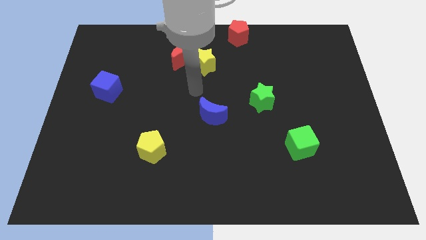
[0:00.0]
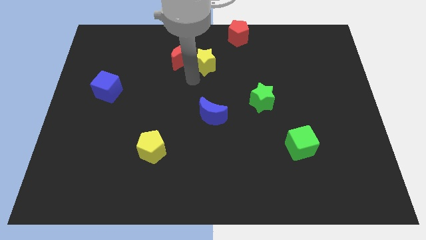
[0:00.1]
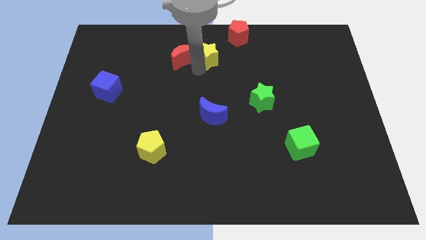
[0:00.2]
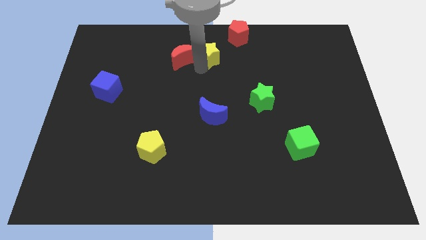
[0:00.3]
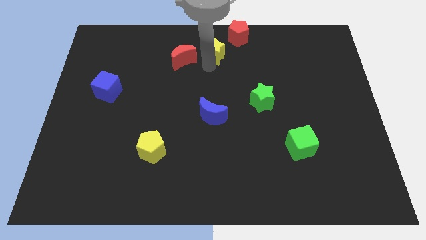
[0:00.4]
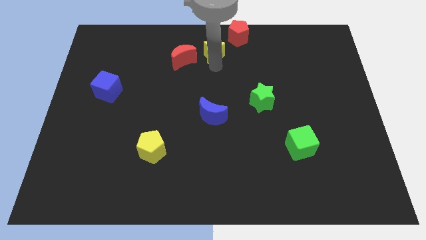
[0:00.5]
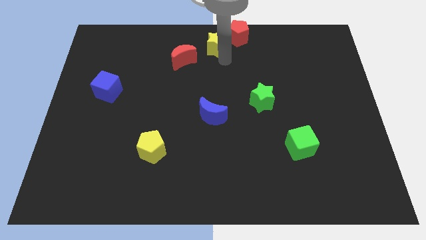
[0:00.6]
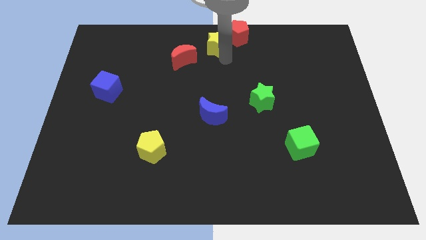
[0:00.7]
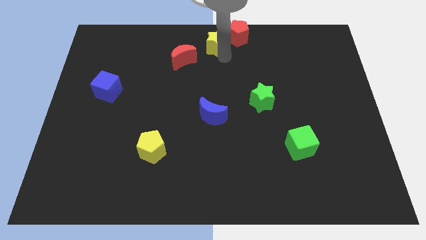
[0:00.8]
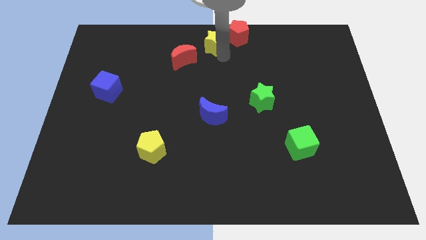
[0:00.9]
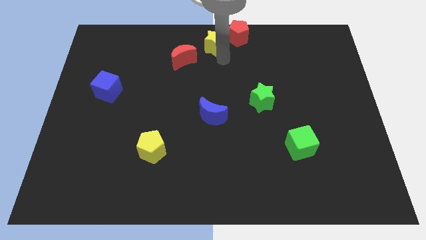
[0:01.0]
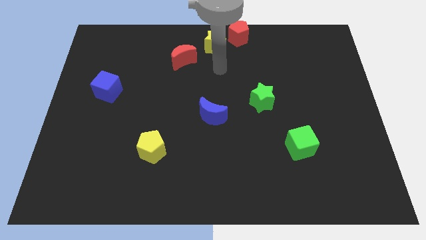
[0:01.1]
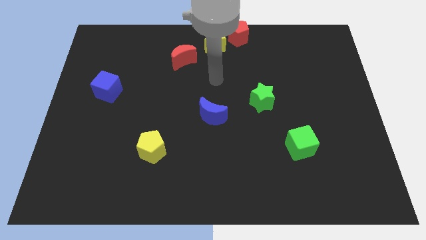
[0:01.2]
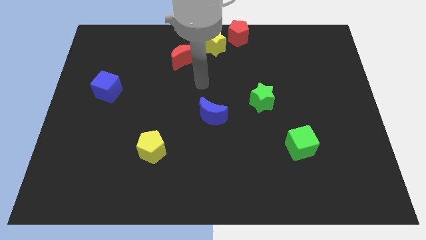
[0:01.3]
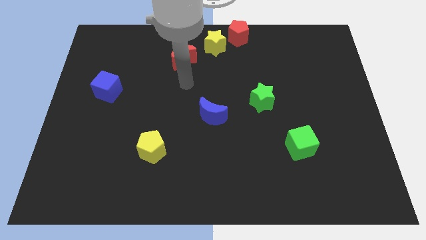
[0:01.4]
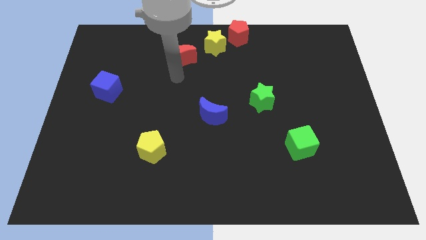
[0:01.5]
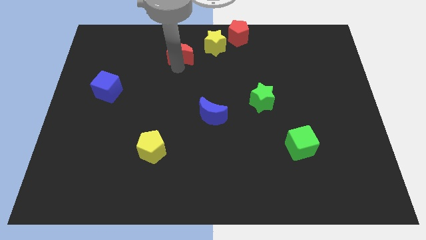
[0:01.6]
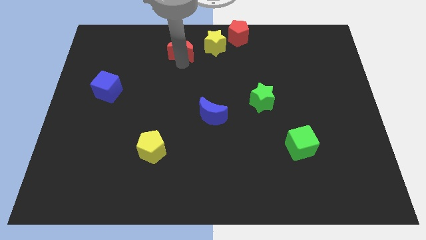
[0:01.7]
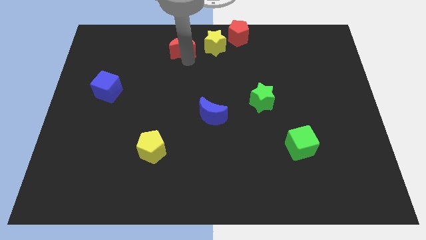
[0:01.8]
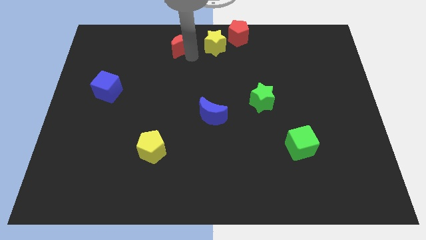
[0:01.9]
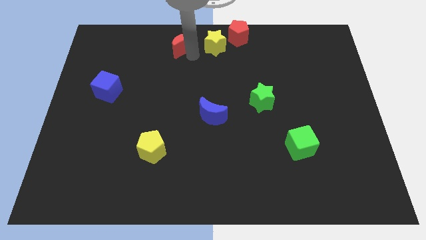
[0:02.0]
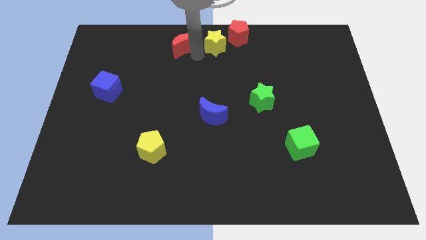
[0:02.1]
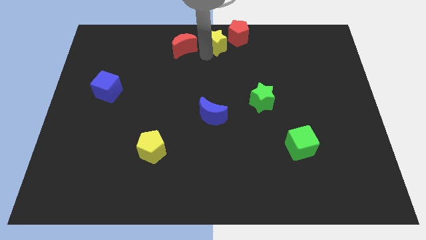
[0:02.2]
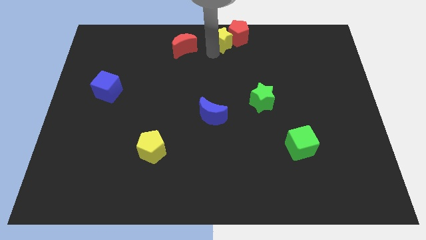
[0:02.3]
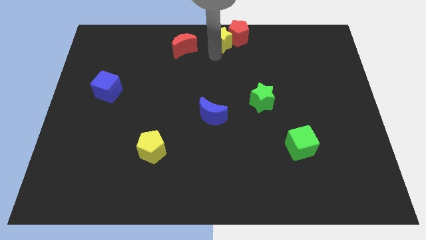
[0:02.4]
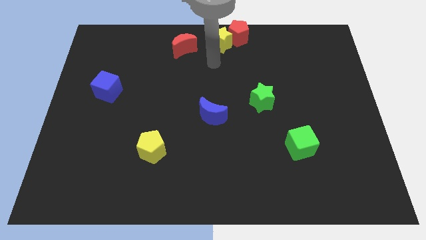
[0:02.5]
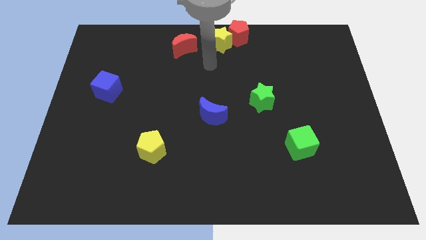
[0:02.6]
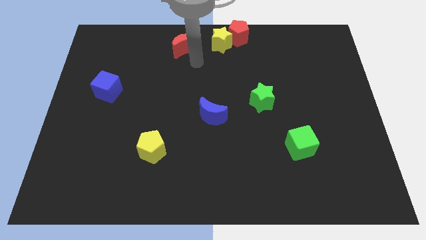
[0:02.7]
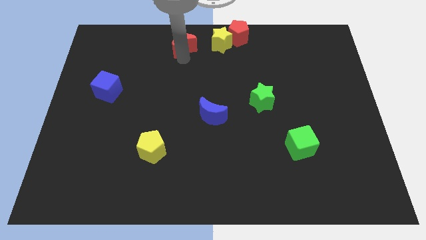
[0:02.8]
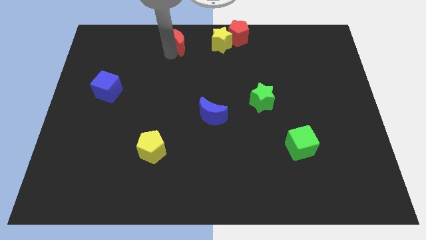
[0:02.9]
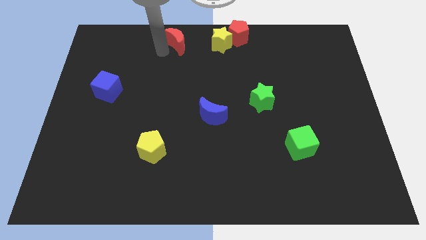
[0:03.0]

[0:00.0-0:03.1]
move yellow star close to red pentagon

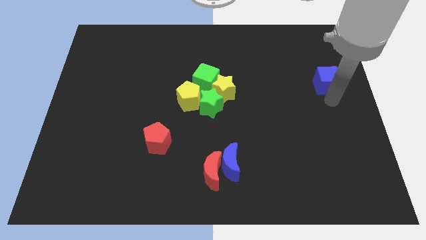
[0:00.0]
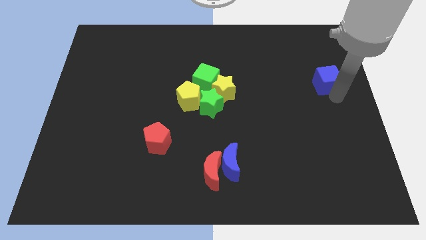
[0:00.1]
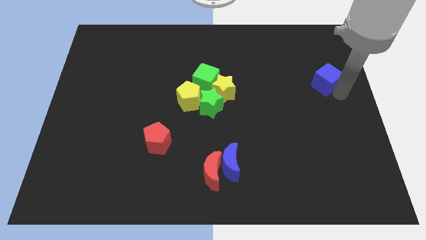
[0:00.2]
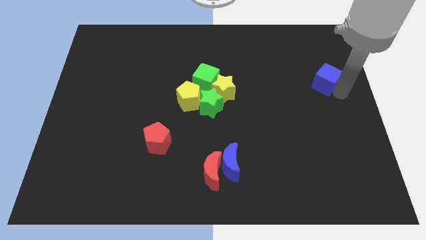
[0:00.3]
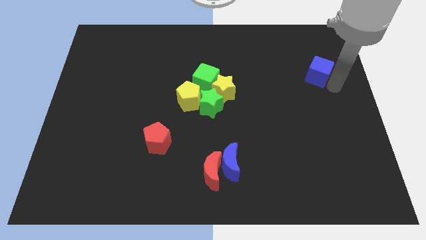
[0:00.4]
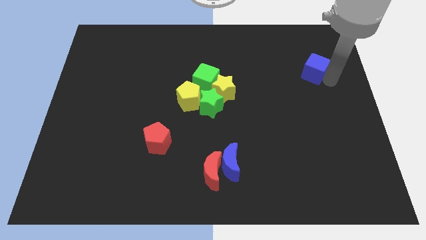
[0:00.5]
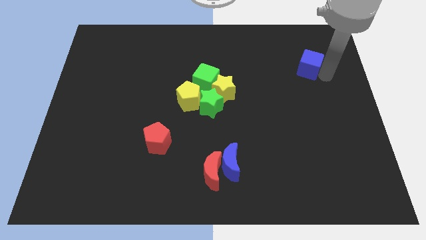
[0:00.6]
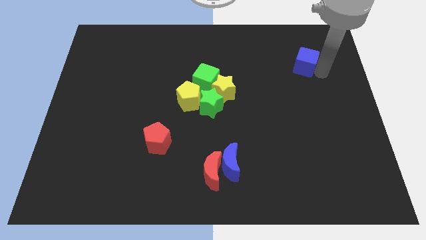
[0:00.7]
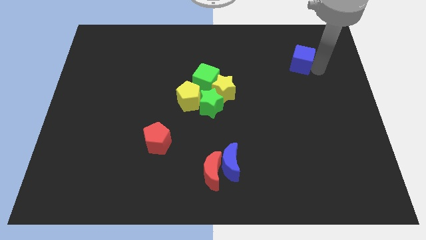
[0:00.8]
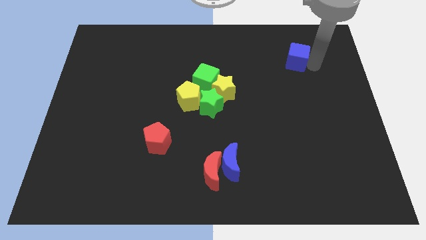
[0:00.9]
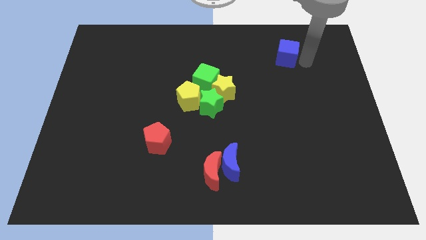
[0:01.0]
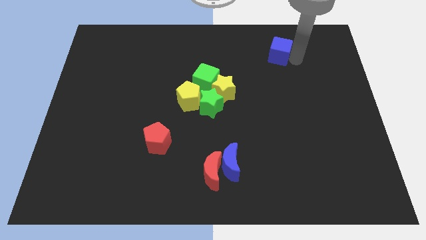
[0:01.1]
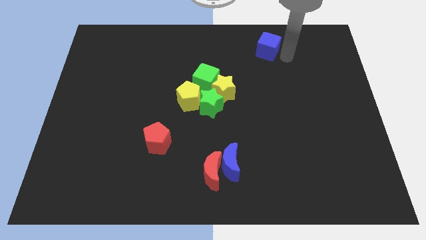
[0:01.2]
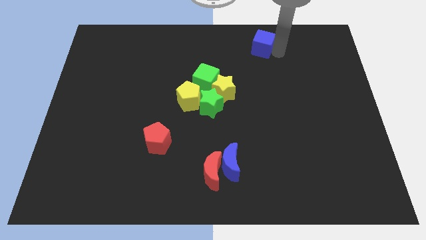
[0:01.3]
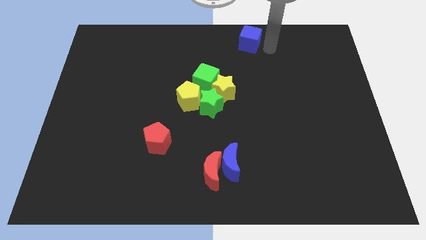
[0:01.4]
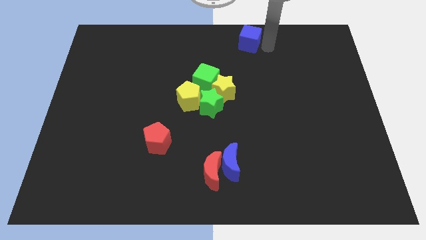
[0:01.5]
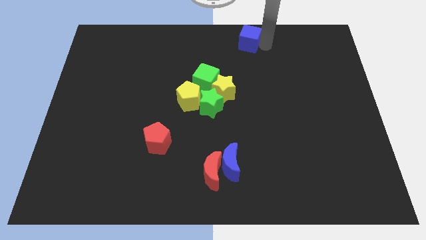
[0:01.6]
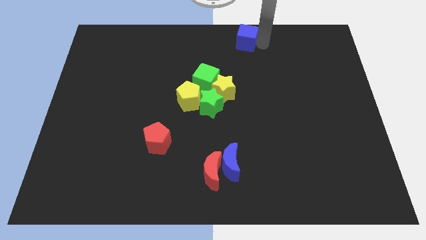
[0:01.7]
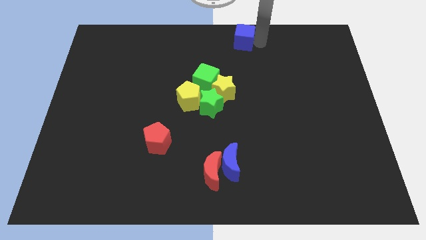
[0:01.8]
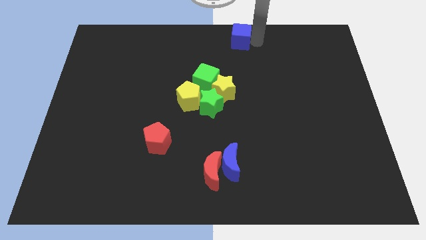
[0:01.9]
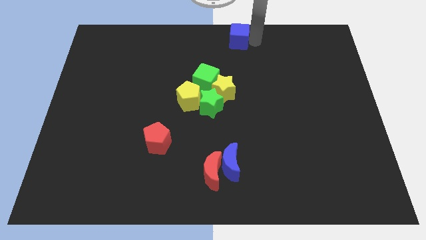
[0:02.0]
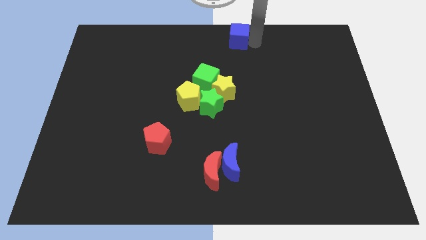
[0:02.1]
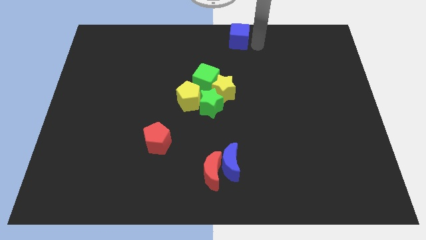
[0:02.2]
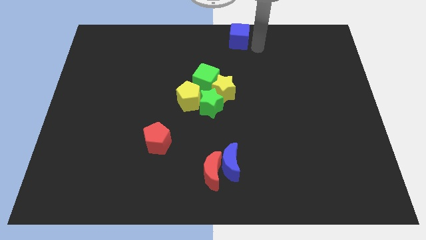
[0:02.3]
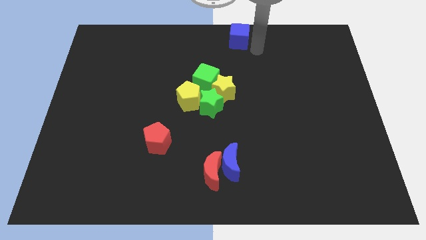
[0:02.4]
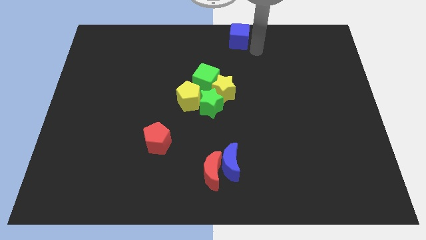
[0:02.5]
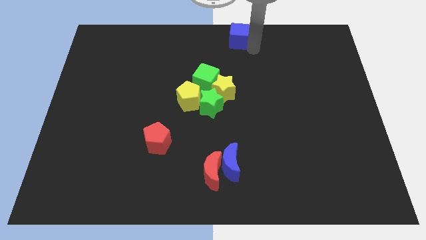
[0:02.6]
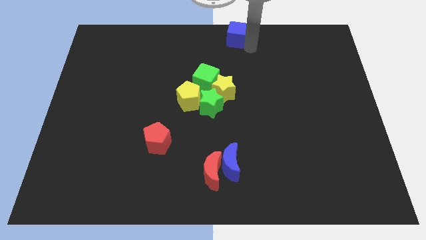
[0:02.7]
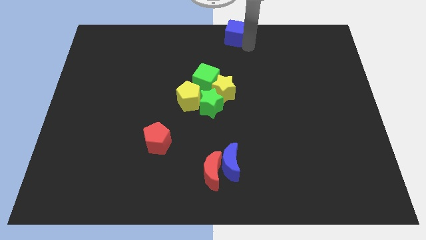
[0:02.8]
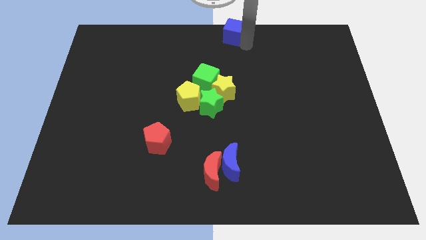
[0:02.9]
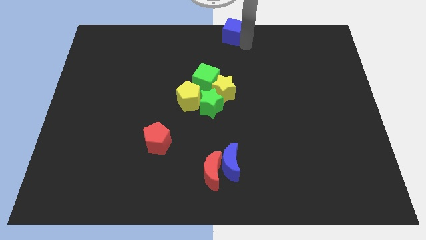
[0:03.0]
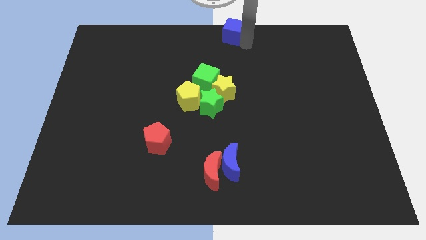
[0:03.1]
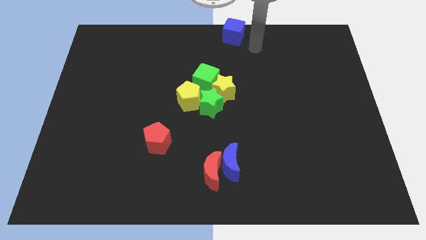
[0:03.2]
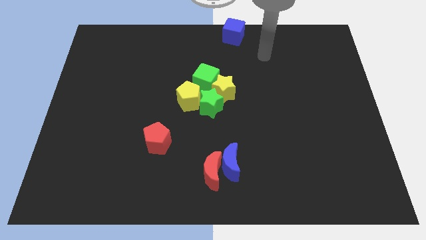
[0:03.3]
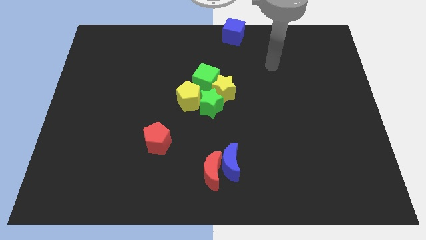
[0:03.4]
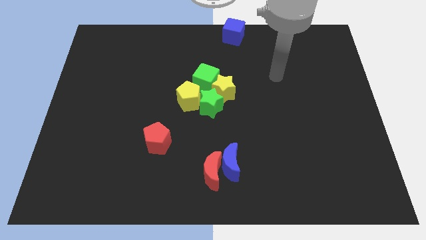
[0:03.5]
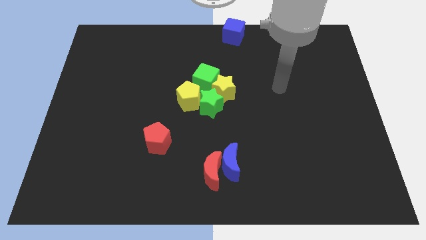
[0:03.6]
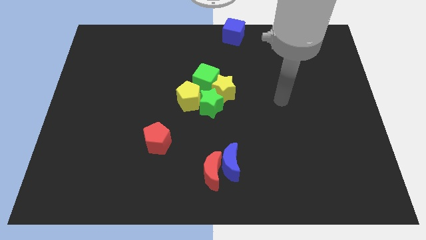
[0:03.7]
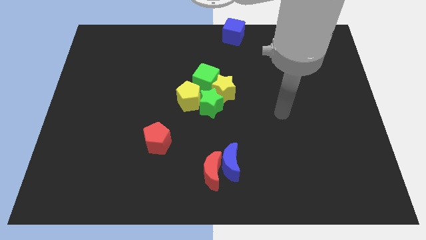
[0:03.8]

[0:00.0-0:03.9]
move blue cube to the top center of the board

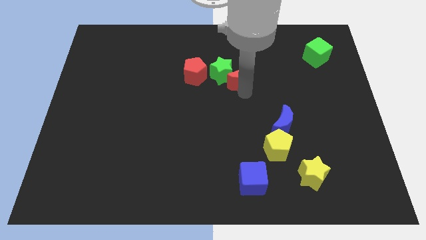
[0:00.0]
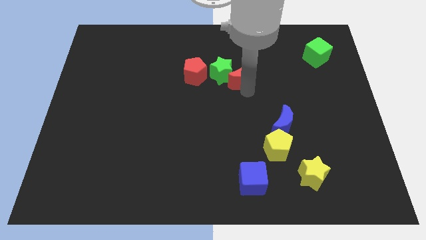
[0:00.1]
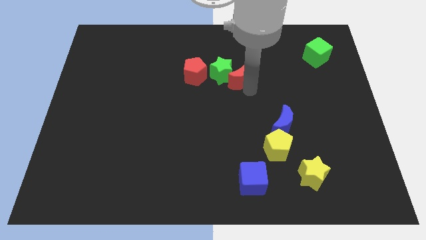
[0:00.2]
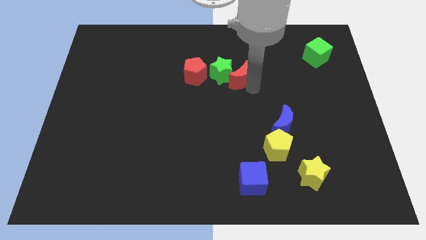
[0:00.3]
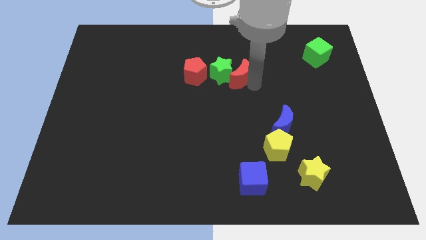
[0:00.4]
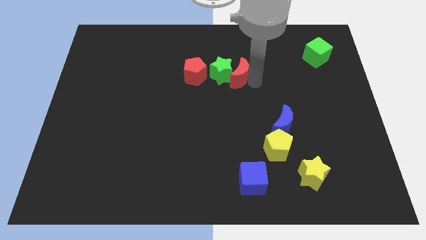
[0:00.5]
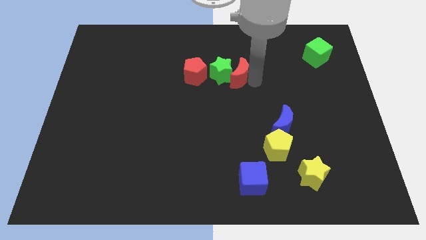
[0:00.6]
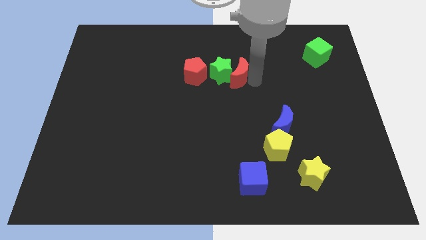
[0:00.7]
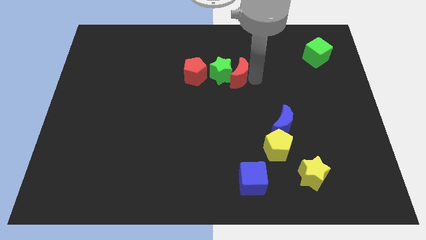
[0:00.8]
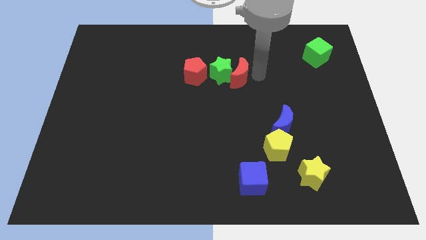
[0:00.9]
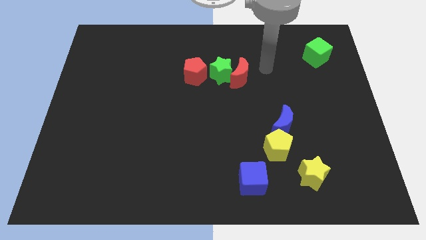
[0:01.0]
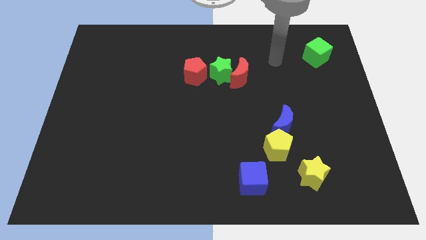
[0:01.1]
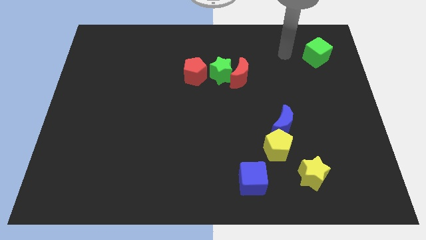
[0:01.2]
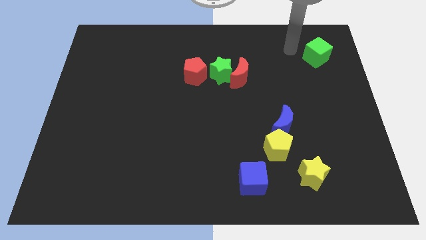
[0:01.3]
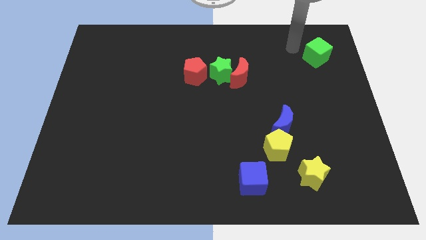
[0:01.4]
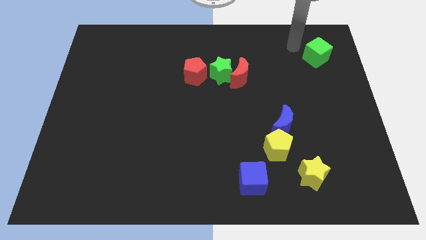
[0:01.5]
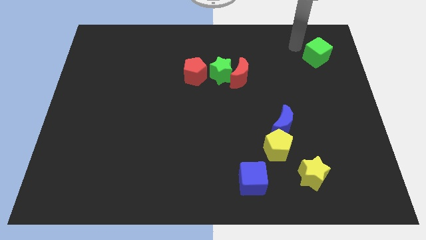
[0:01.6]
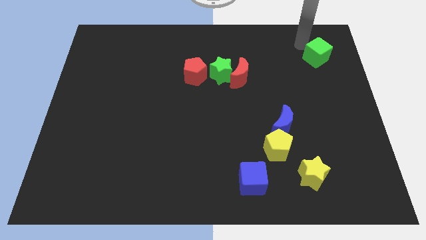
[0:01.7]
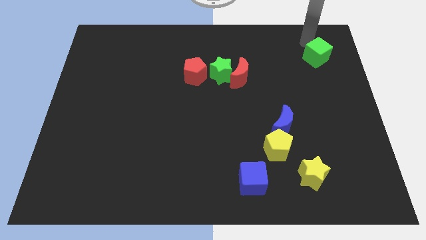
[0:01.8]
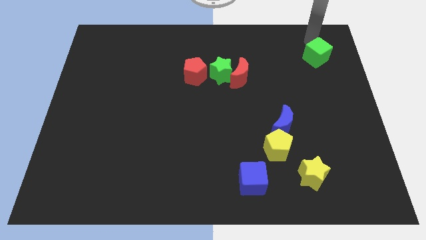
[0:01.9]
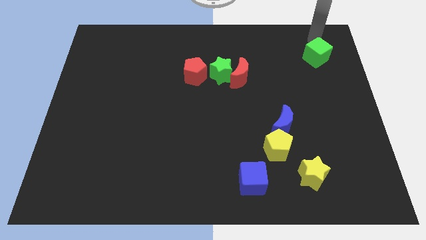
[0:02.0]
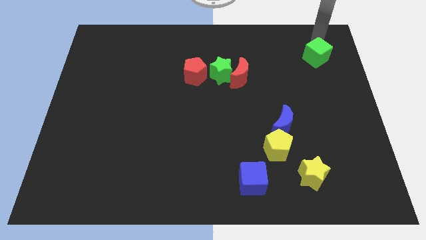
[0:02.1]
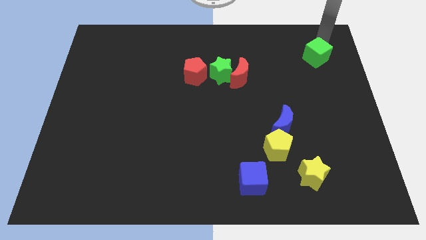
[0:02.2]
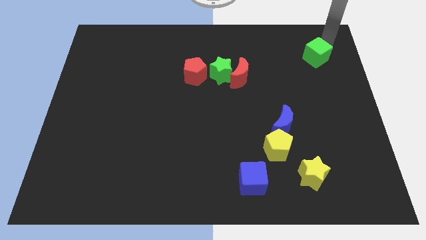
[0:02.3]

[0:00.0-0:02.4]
move red moon right beside the green star
